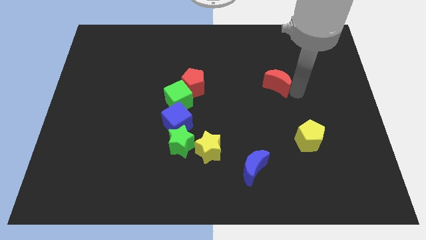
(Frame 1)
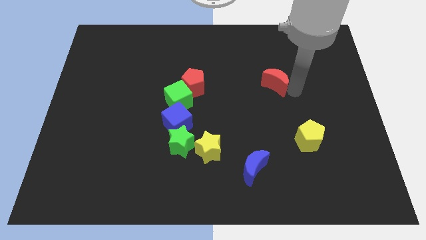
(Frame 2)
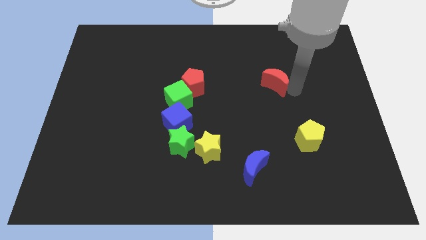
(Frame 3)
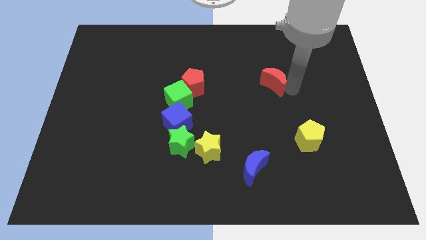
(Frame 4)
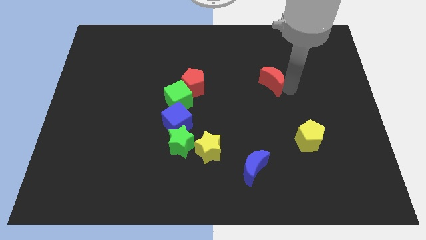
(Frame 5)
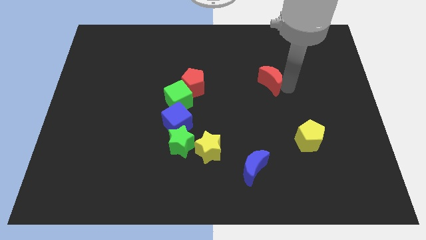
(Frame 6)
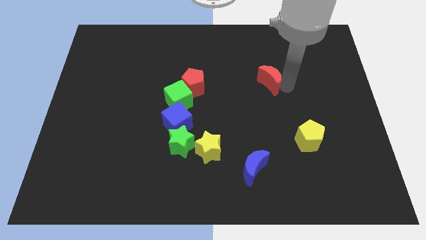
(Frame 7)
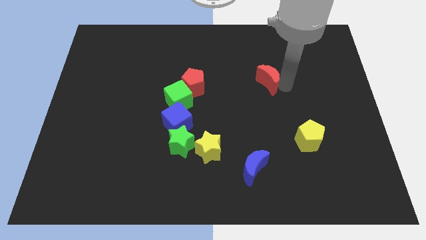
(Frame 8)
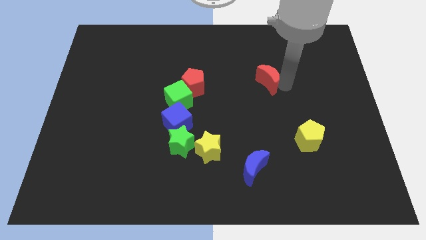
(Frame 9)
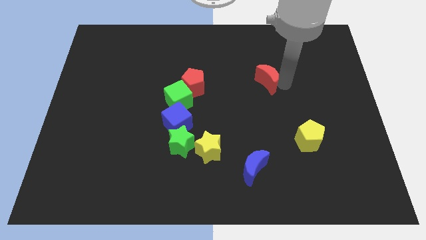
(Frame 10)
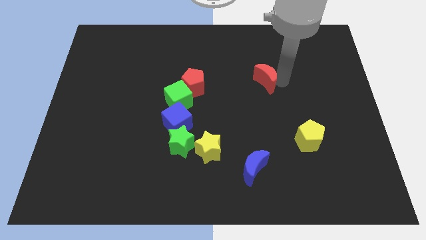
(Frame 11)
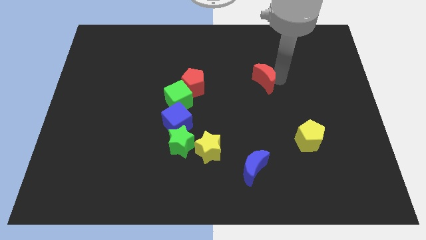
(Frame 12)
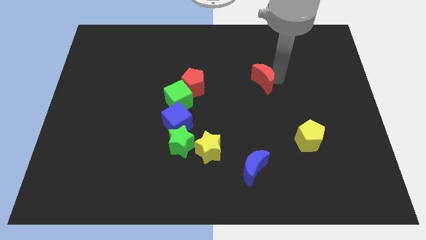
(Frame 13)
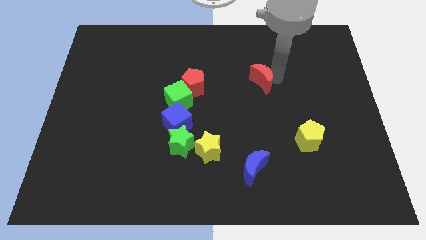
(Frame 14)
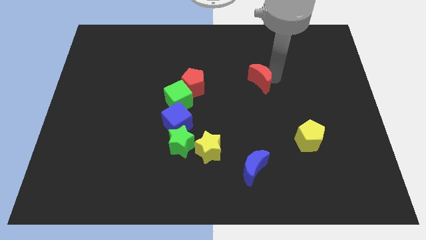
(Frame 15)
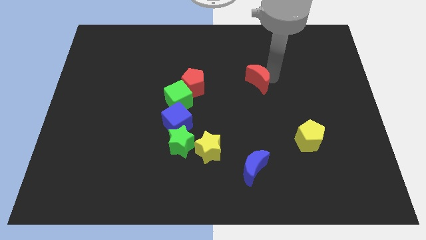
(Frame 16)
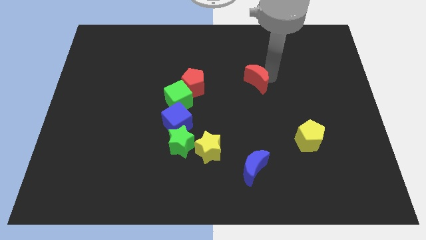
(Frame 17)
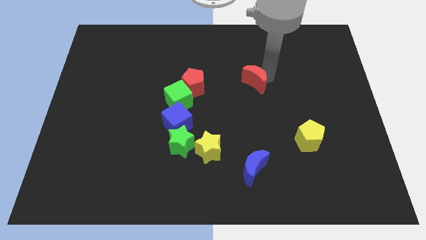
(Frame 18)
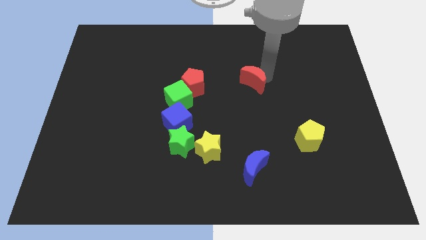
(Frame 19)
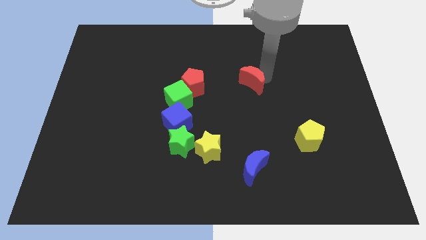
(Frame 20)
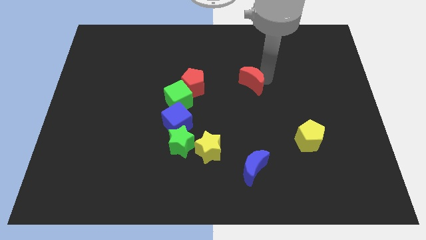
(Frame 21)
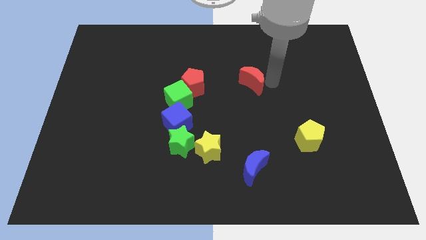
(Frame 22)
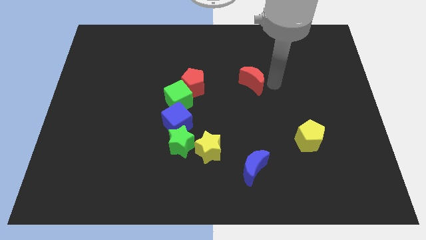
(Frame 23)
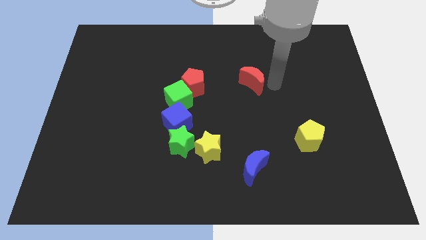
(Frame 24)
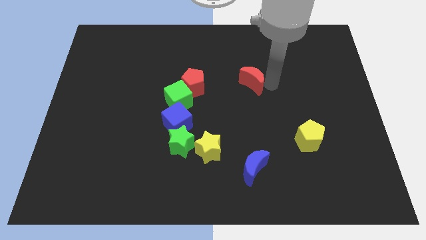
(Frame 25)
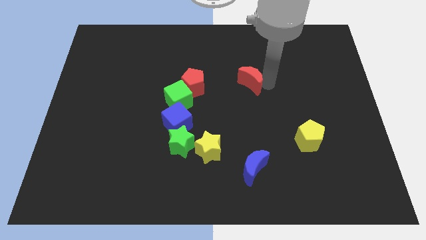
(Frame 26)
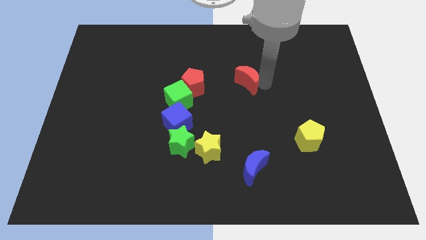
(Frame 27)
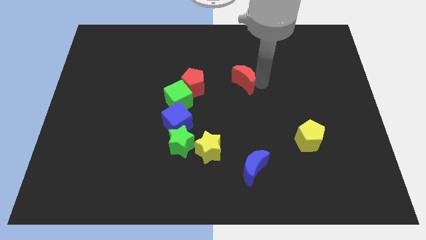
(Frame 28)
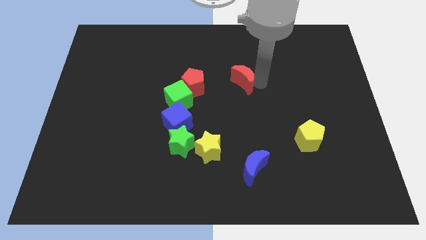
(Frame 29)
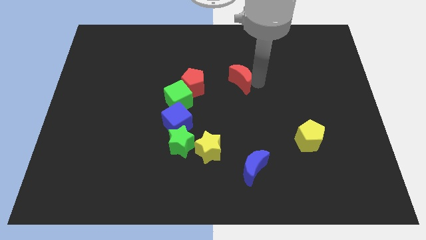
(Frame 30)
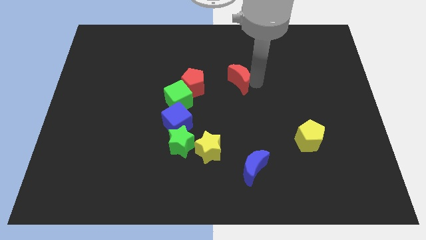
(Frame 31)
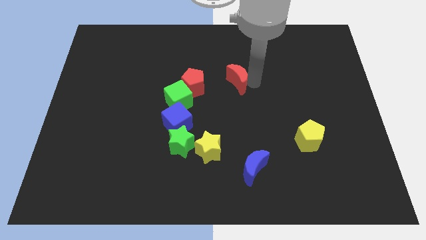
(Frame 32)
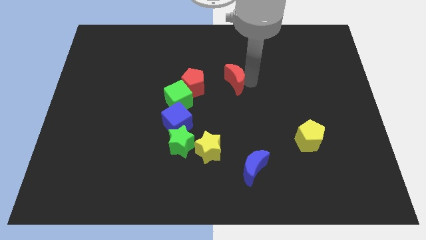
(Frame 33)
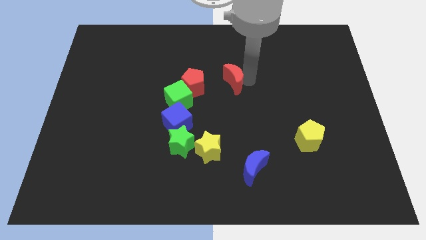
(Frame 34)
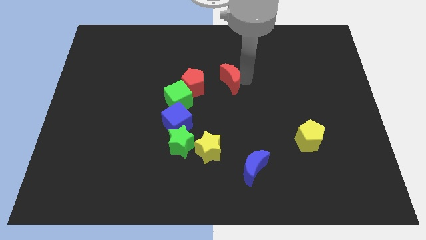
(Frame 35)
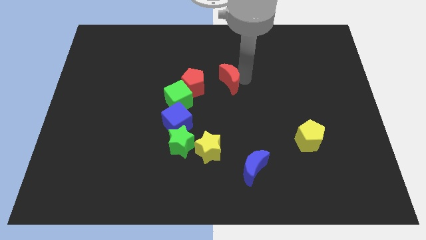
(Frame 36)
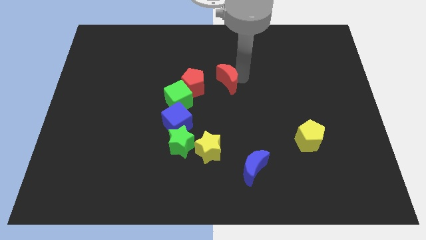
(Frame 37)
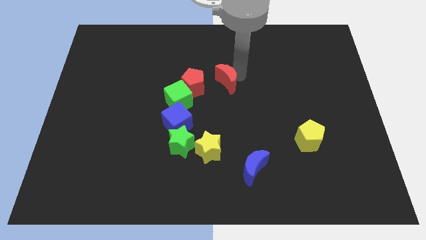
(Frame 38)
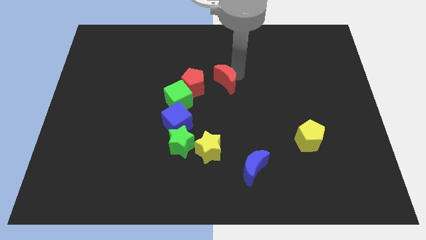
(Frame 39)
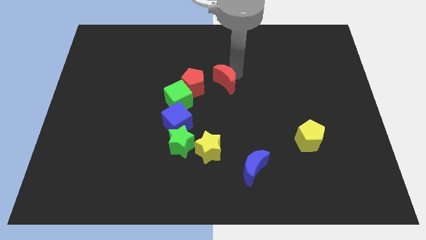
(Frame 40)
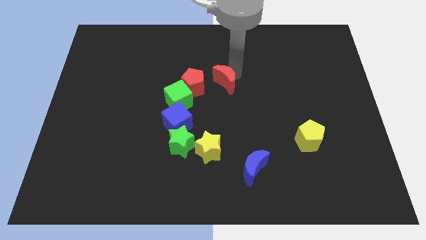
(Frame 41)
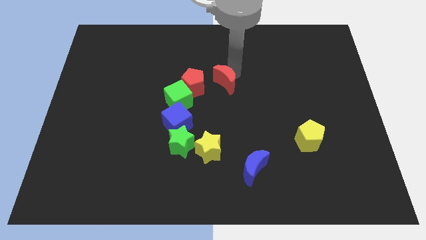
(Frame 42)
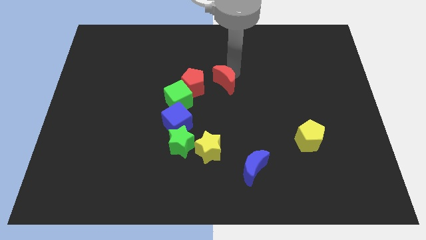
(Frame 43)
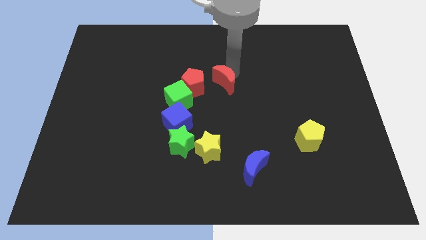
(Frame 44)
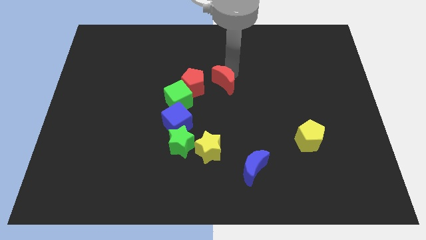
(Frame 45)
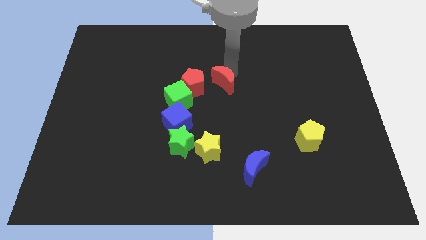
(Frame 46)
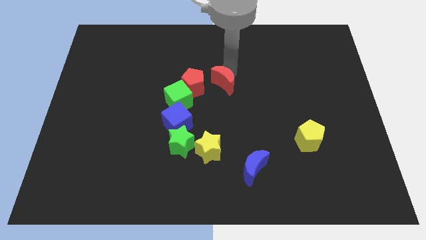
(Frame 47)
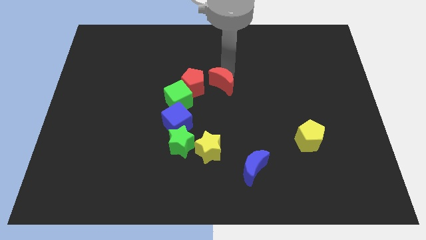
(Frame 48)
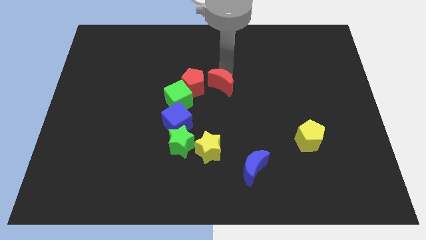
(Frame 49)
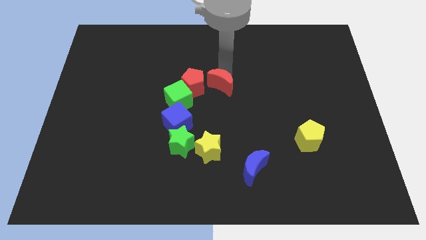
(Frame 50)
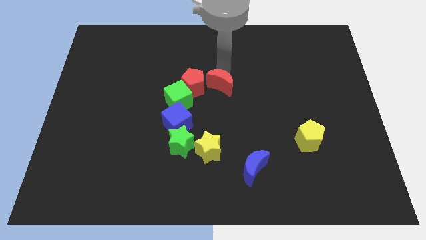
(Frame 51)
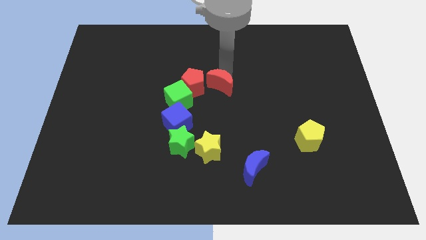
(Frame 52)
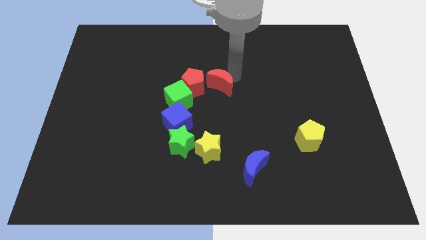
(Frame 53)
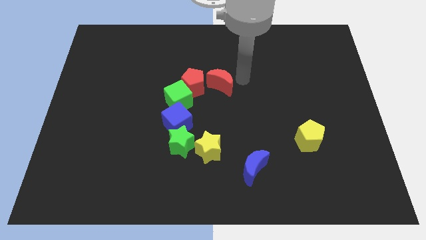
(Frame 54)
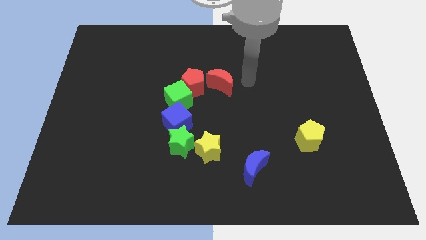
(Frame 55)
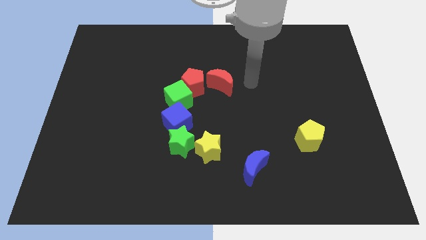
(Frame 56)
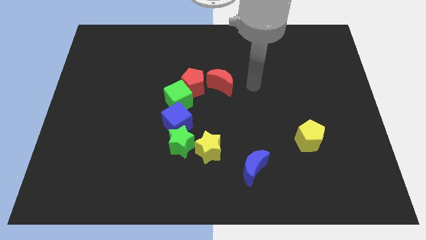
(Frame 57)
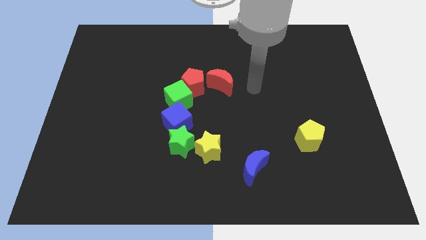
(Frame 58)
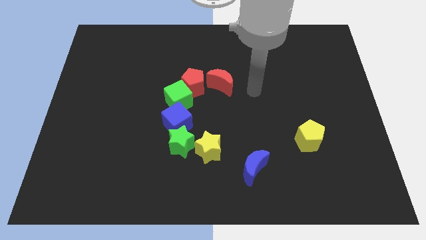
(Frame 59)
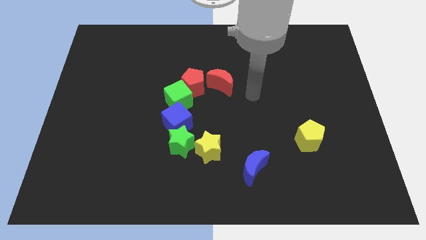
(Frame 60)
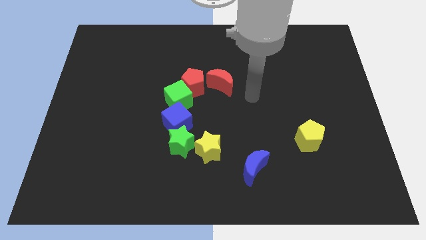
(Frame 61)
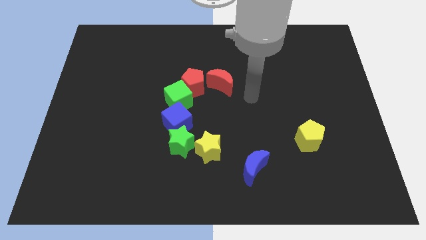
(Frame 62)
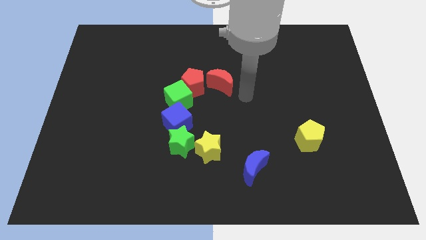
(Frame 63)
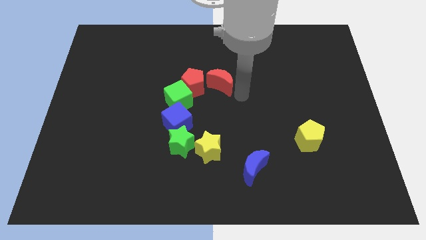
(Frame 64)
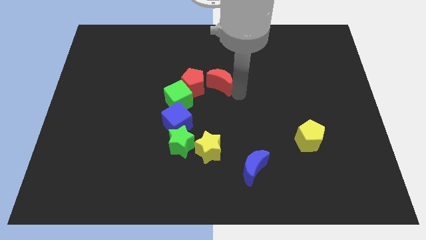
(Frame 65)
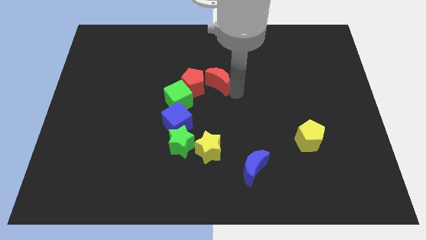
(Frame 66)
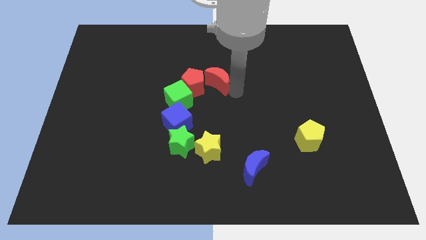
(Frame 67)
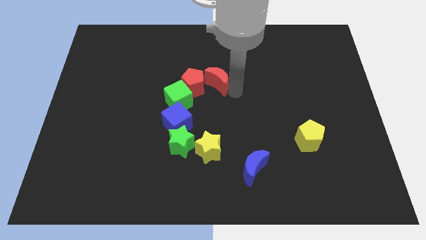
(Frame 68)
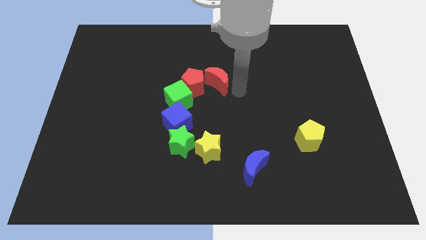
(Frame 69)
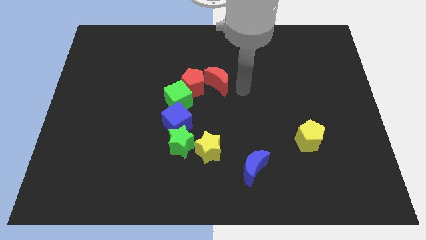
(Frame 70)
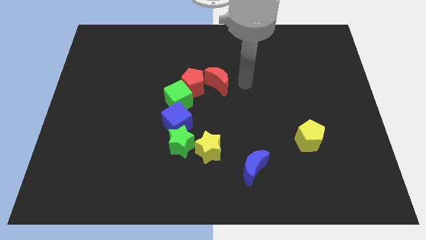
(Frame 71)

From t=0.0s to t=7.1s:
push red crescent to the right of the red pentagon

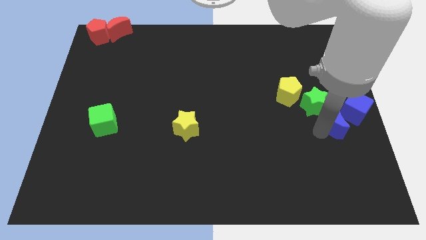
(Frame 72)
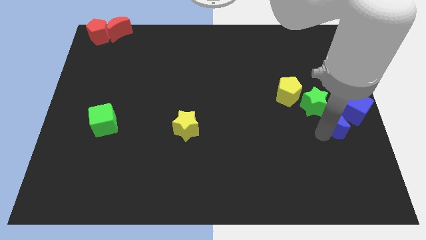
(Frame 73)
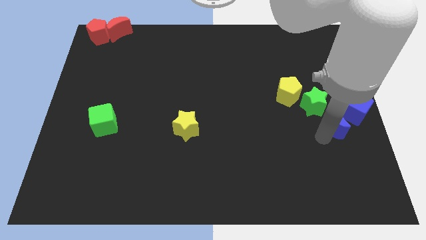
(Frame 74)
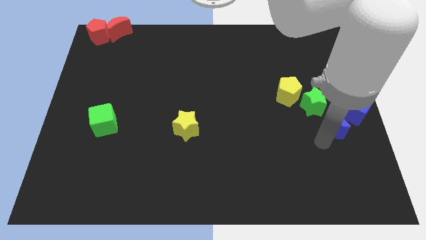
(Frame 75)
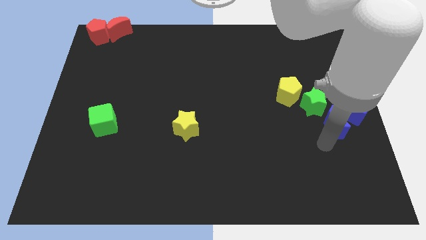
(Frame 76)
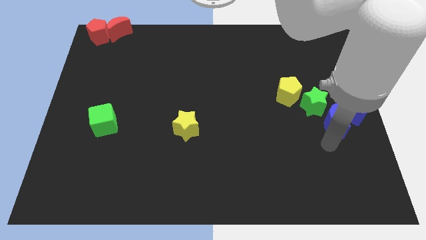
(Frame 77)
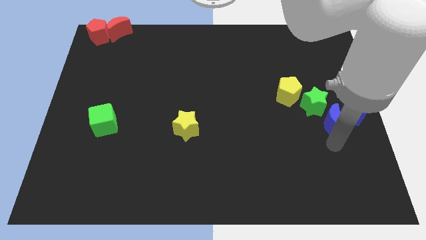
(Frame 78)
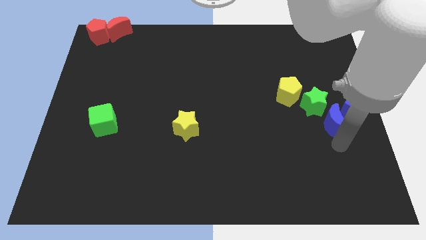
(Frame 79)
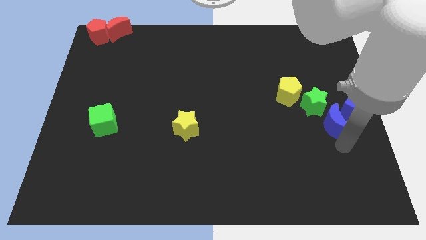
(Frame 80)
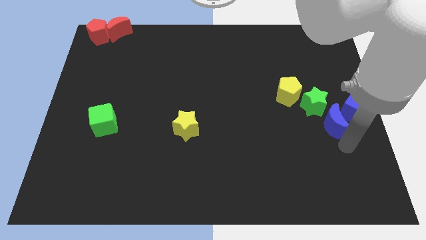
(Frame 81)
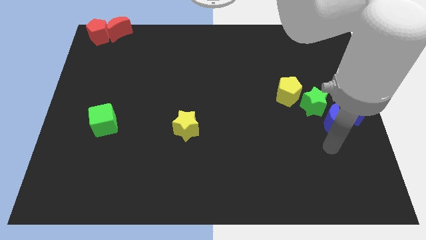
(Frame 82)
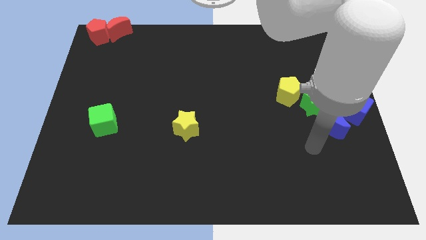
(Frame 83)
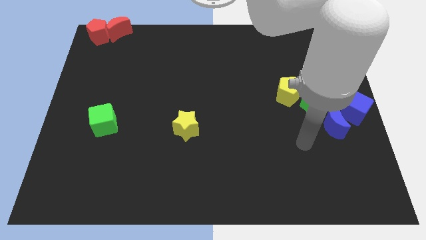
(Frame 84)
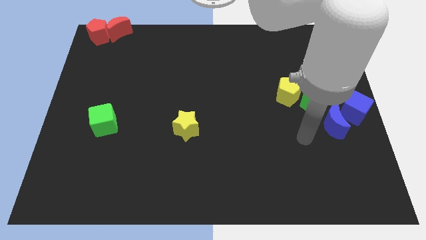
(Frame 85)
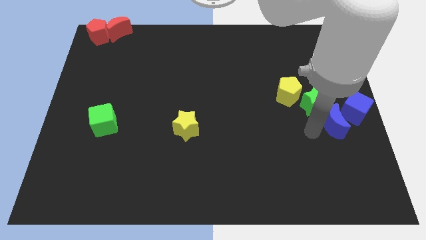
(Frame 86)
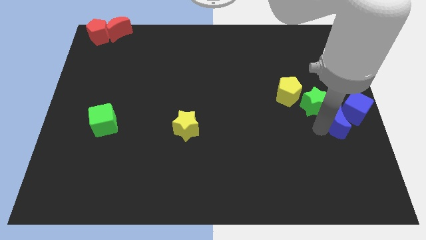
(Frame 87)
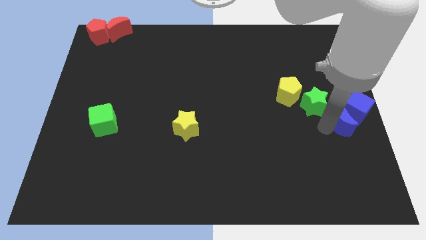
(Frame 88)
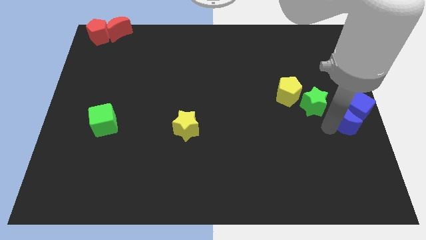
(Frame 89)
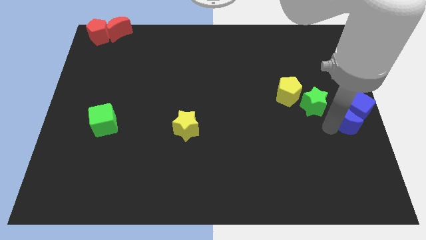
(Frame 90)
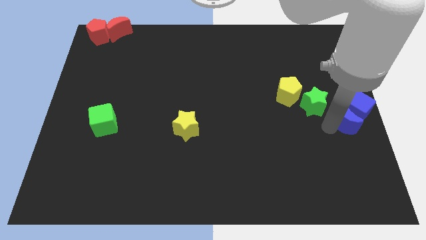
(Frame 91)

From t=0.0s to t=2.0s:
place blue crescent below blue cube
